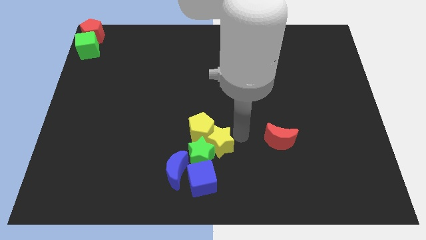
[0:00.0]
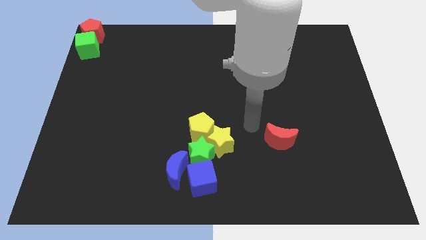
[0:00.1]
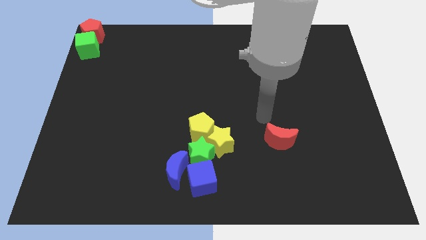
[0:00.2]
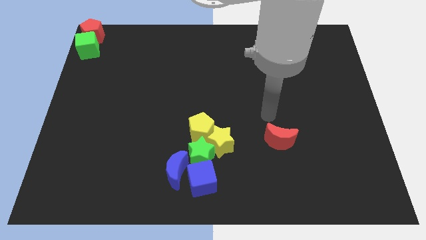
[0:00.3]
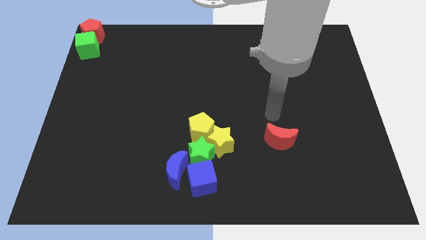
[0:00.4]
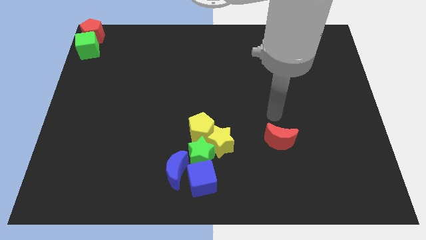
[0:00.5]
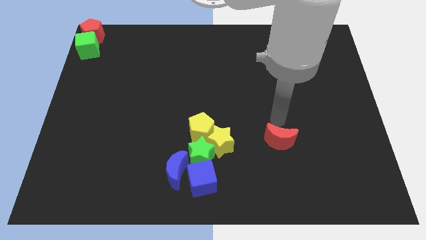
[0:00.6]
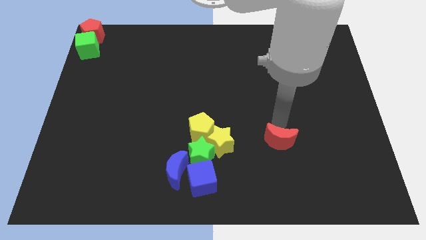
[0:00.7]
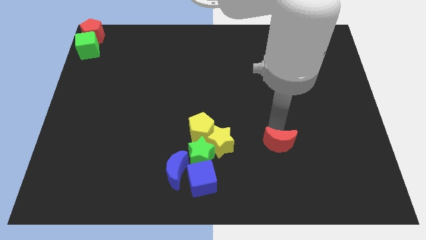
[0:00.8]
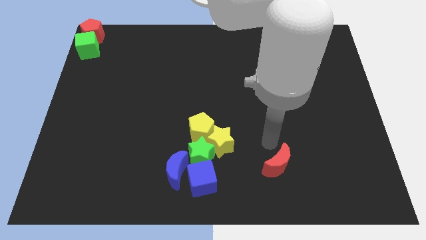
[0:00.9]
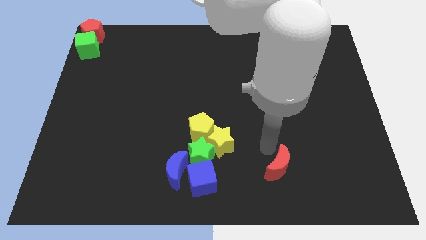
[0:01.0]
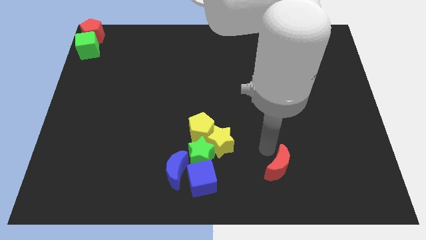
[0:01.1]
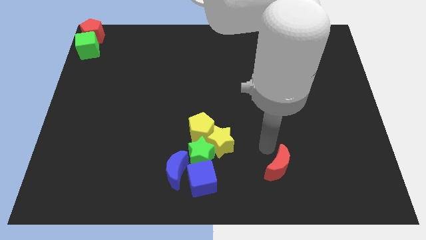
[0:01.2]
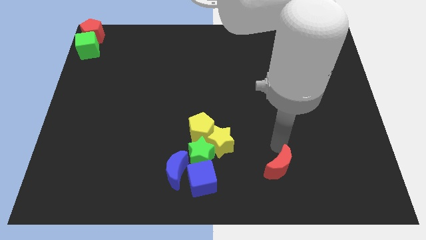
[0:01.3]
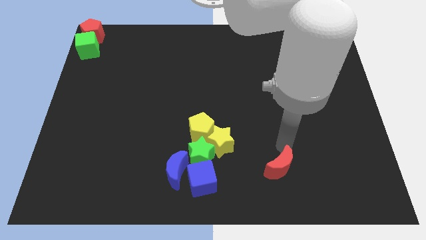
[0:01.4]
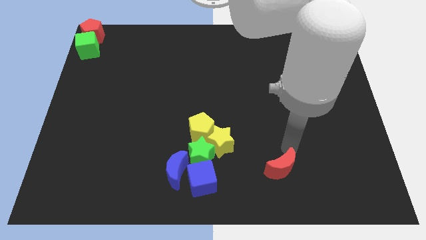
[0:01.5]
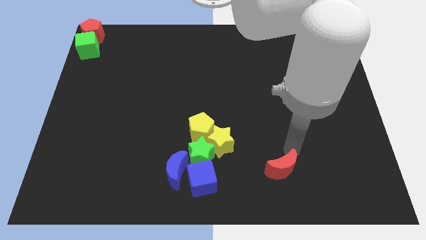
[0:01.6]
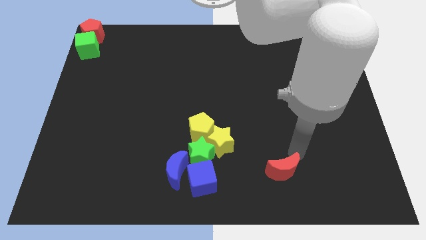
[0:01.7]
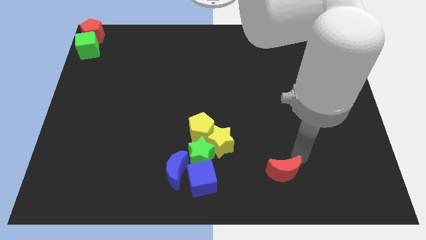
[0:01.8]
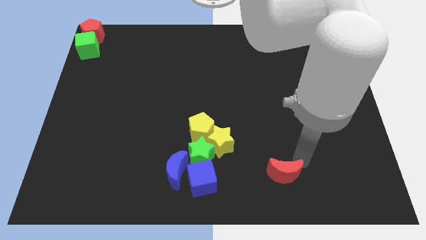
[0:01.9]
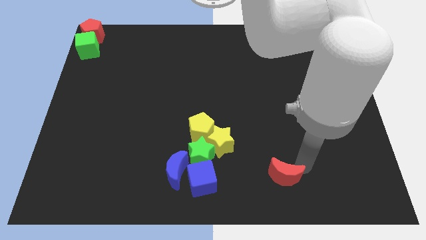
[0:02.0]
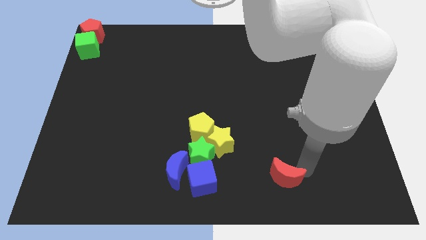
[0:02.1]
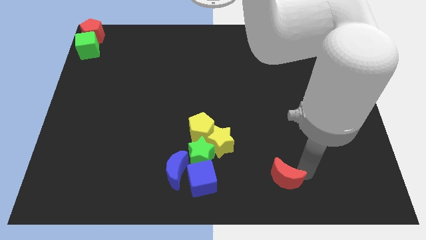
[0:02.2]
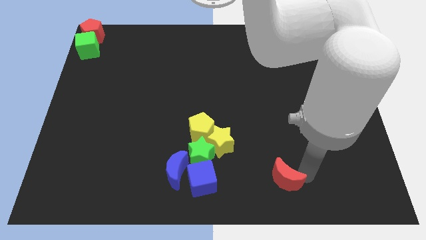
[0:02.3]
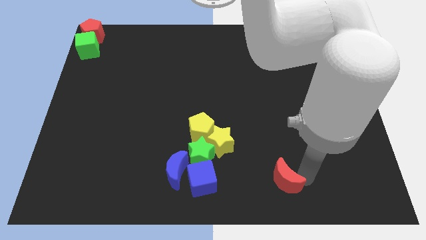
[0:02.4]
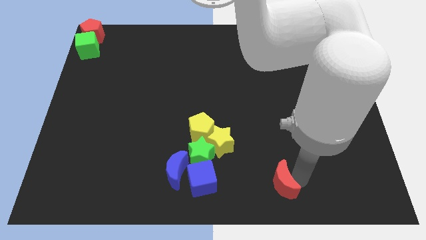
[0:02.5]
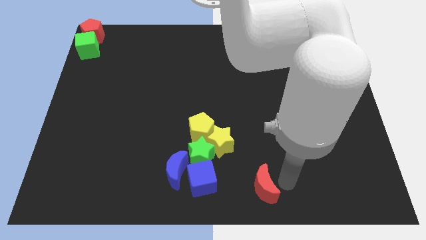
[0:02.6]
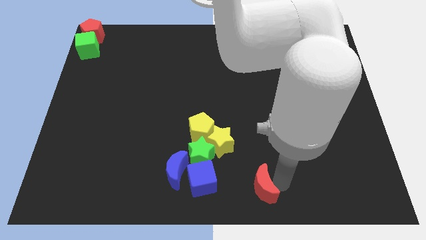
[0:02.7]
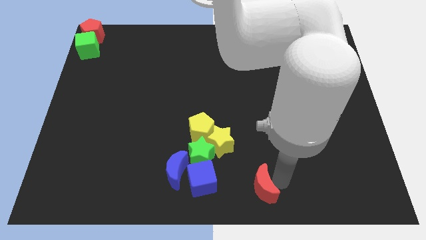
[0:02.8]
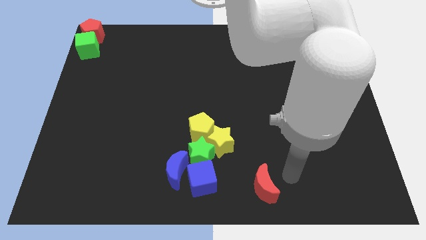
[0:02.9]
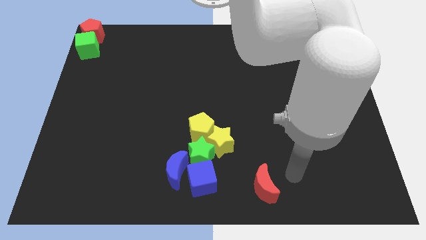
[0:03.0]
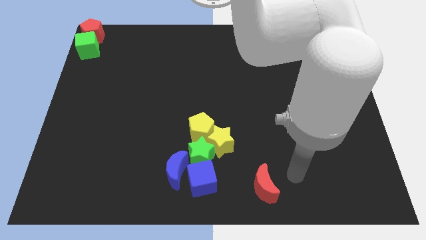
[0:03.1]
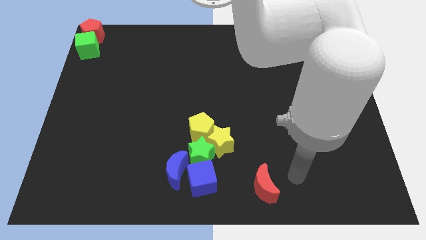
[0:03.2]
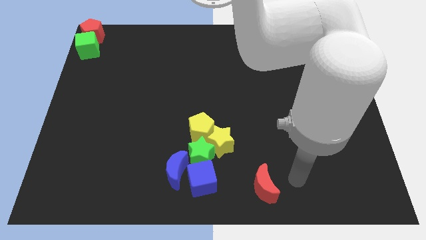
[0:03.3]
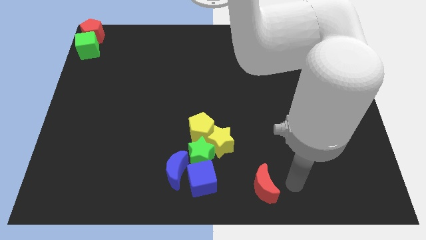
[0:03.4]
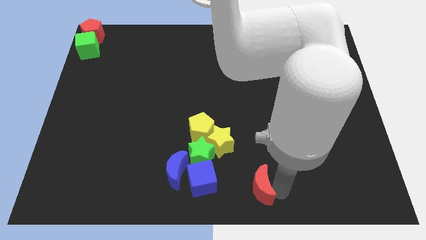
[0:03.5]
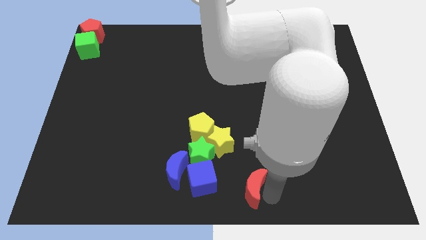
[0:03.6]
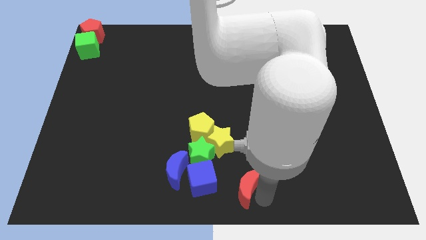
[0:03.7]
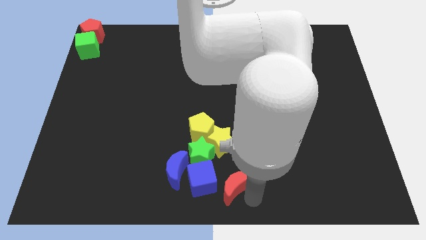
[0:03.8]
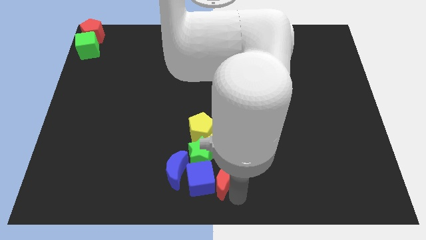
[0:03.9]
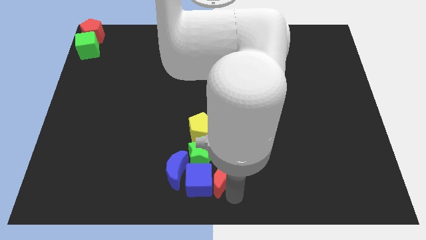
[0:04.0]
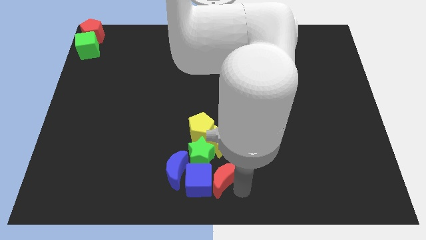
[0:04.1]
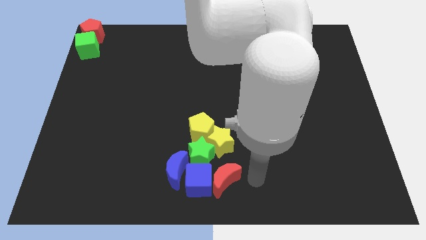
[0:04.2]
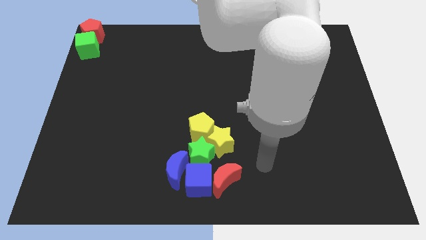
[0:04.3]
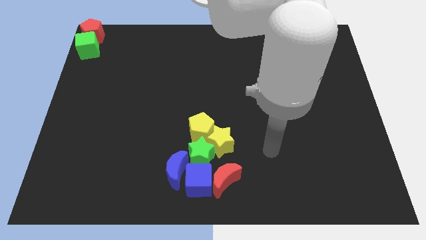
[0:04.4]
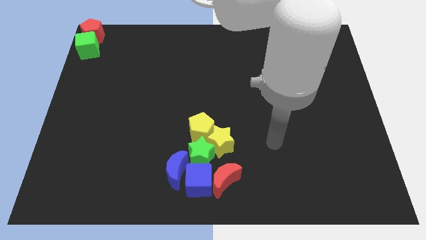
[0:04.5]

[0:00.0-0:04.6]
move the red crescent to the right side of the blue cube

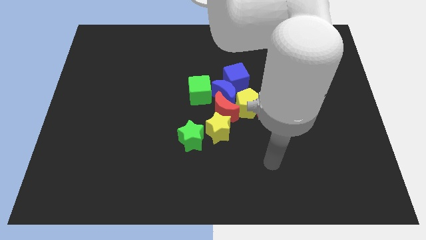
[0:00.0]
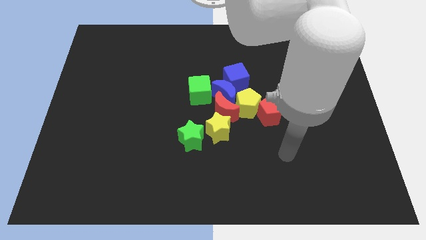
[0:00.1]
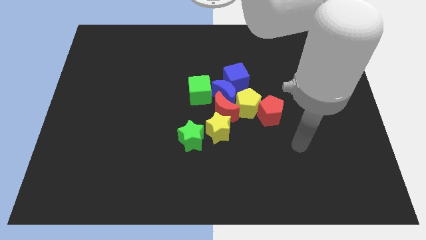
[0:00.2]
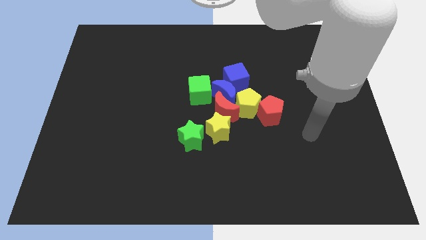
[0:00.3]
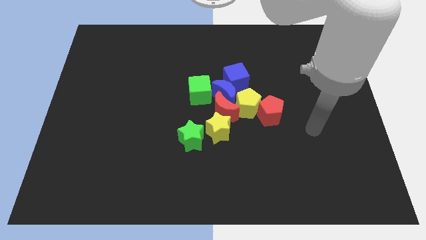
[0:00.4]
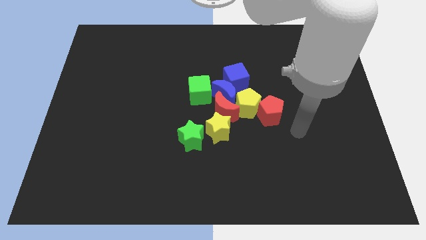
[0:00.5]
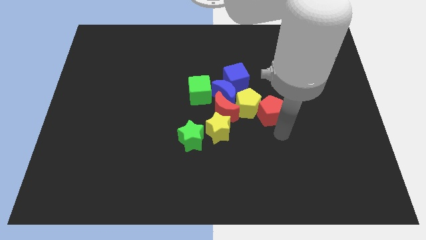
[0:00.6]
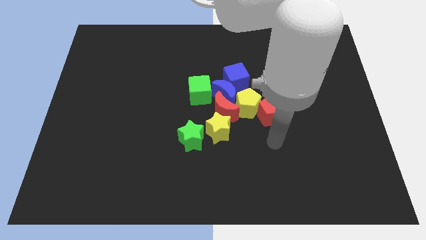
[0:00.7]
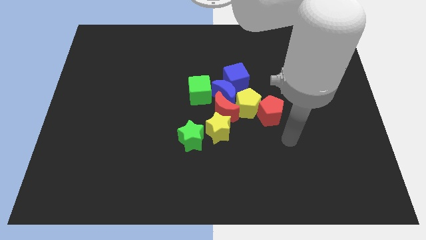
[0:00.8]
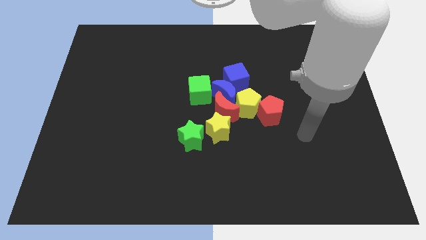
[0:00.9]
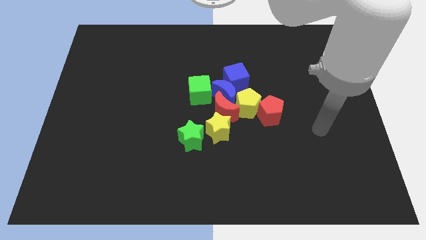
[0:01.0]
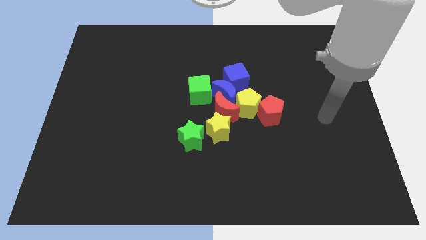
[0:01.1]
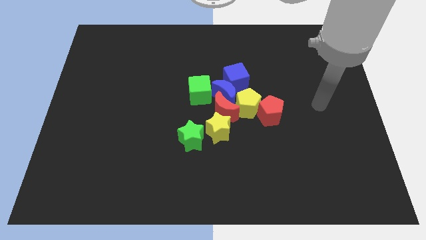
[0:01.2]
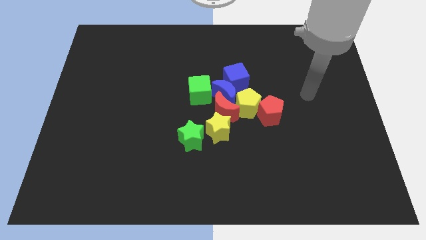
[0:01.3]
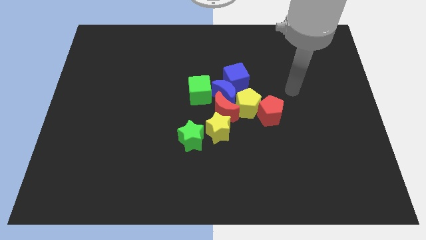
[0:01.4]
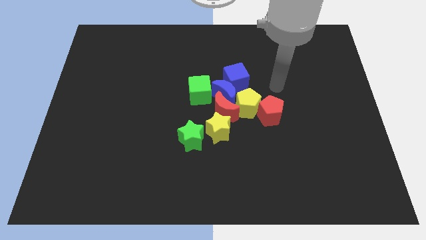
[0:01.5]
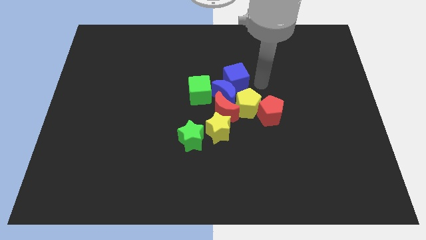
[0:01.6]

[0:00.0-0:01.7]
move your arm to the top of red pentagon

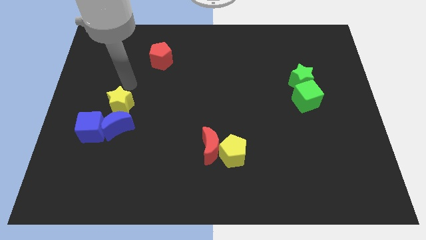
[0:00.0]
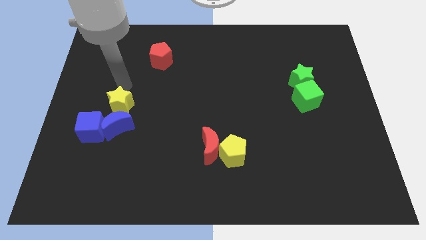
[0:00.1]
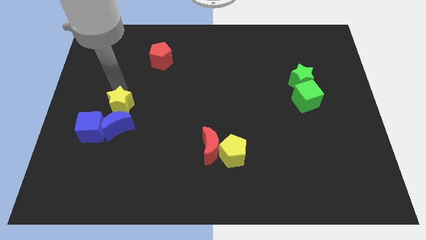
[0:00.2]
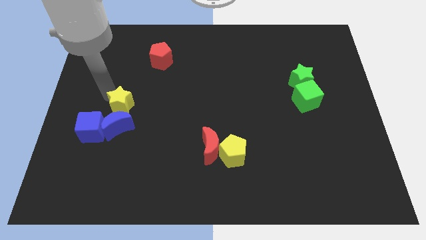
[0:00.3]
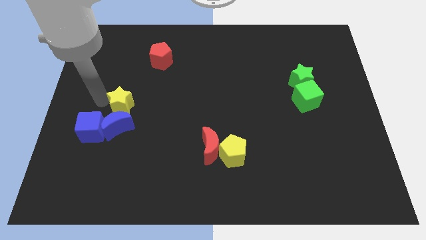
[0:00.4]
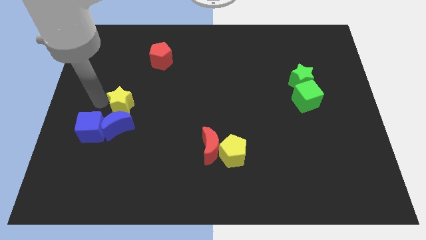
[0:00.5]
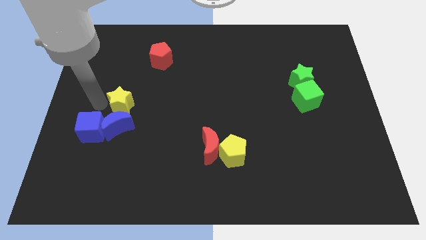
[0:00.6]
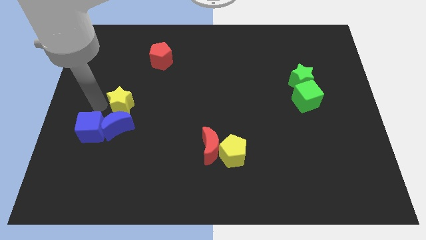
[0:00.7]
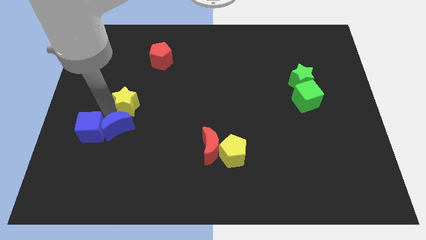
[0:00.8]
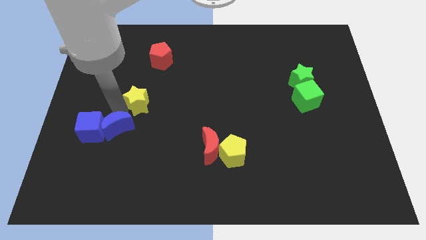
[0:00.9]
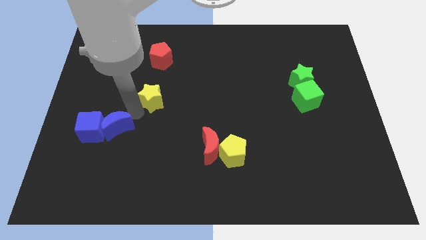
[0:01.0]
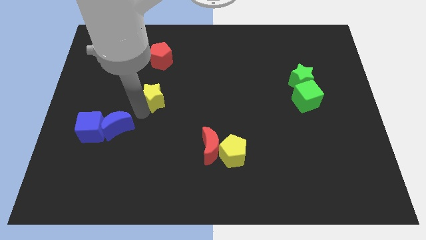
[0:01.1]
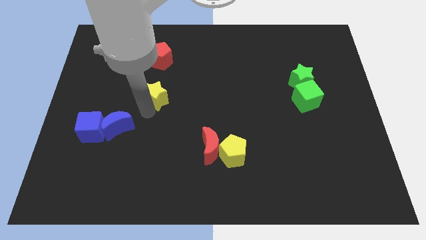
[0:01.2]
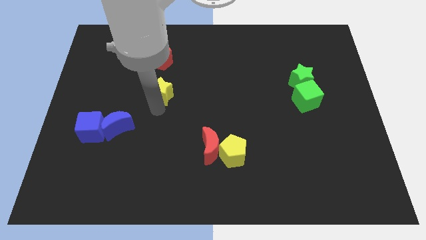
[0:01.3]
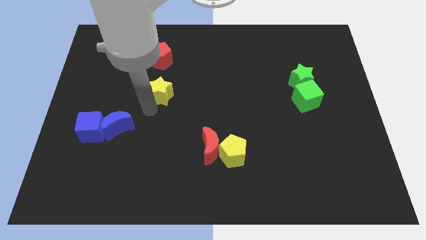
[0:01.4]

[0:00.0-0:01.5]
place the yellow star vertically below the red pentagon

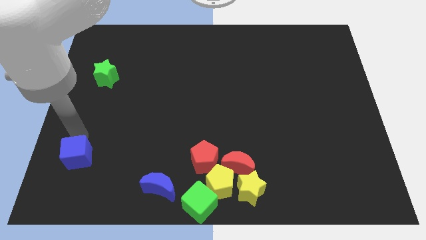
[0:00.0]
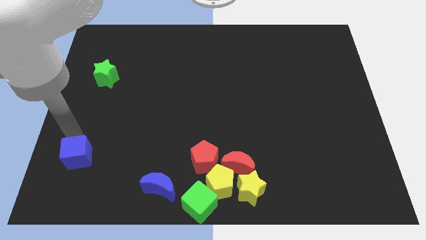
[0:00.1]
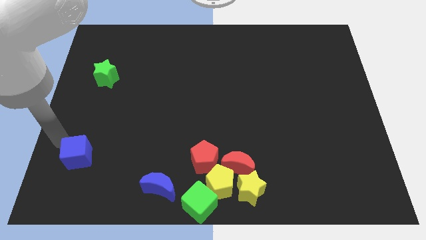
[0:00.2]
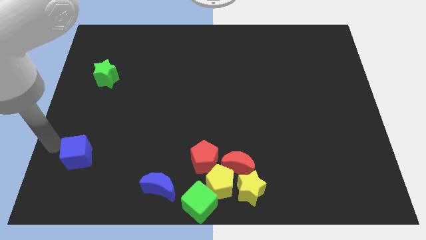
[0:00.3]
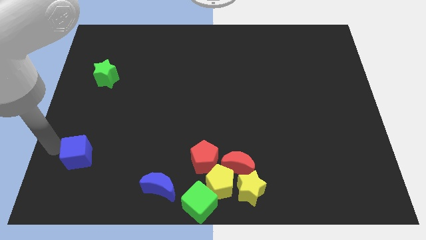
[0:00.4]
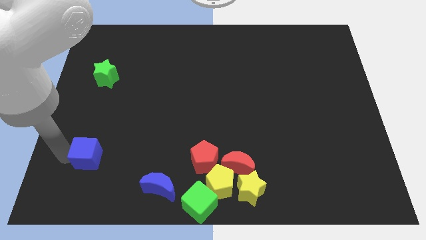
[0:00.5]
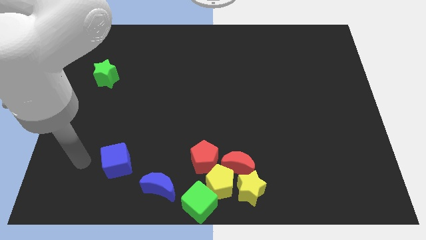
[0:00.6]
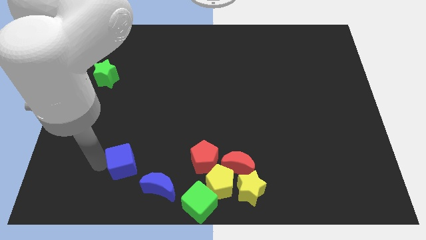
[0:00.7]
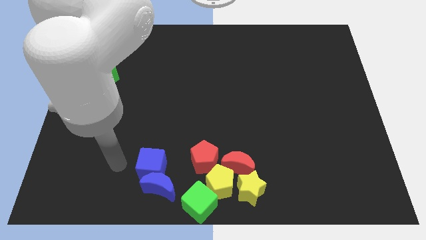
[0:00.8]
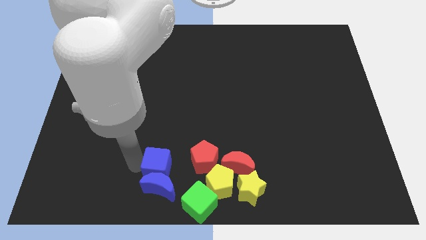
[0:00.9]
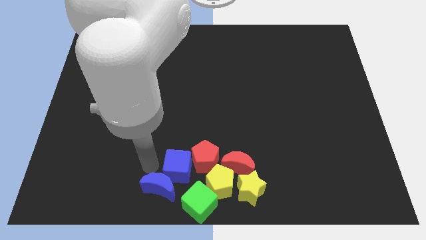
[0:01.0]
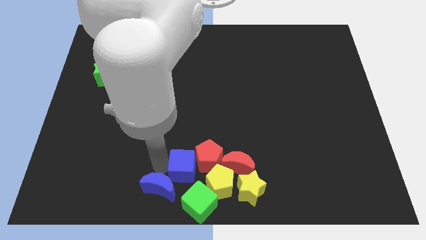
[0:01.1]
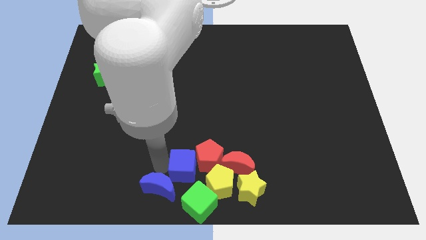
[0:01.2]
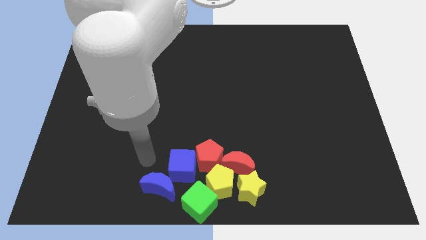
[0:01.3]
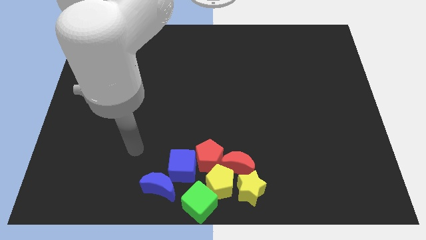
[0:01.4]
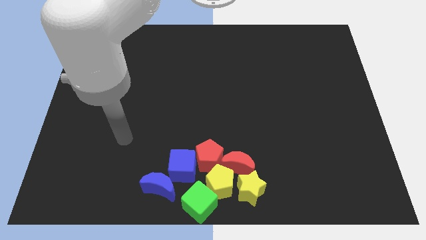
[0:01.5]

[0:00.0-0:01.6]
add the blue cube to the group of blocks at the bottom center of the board
